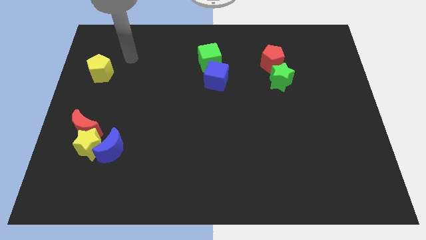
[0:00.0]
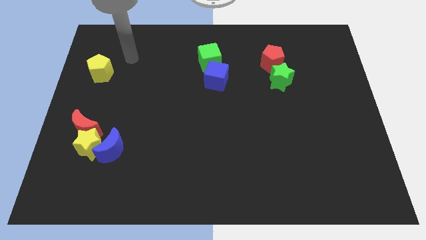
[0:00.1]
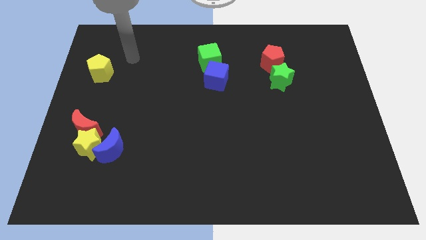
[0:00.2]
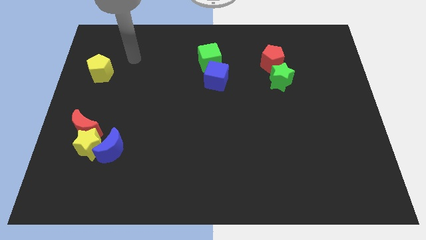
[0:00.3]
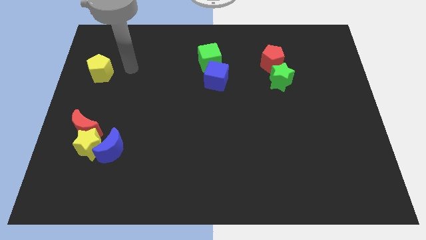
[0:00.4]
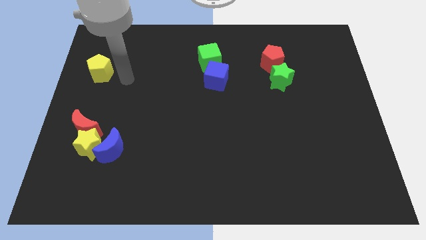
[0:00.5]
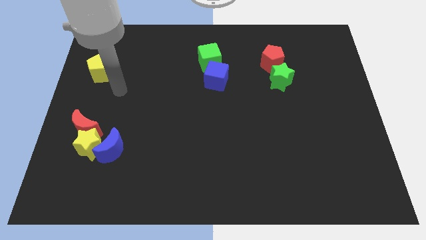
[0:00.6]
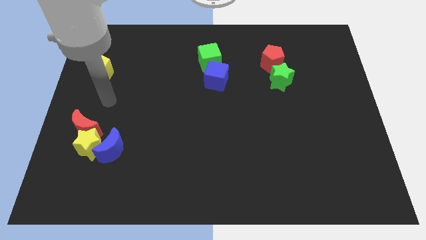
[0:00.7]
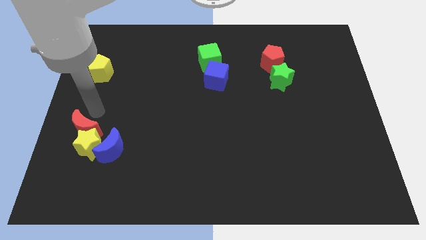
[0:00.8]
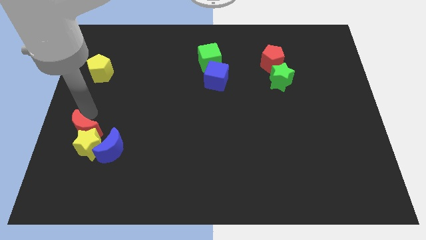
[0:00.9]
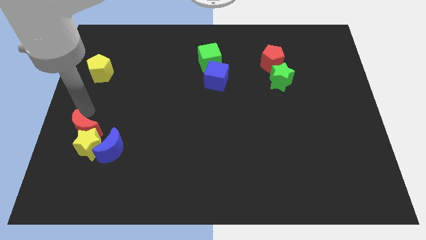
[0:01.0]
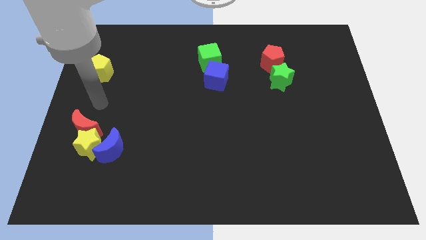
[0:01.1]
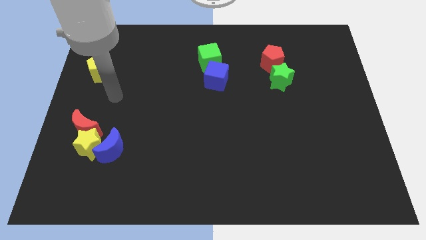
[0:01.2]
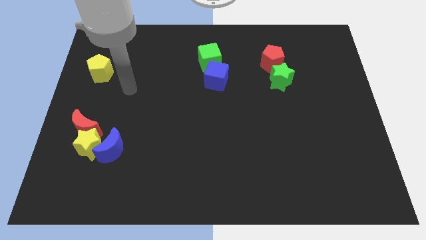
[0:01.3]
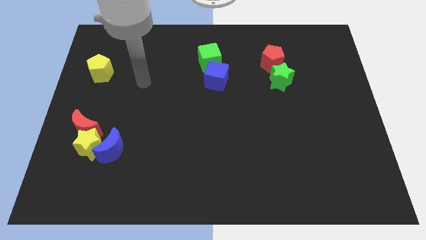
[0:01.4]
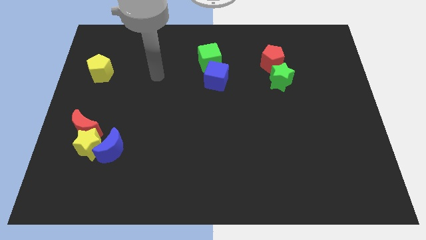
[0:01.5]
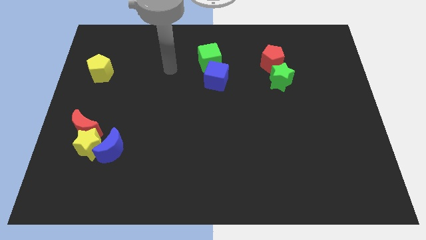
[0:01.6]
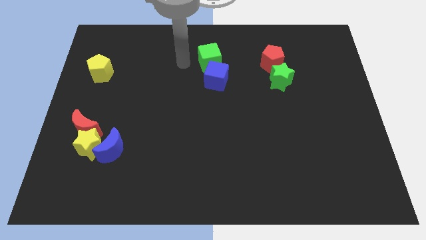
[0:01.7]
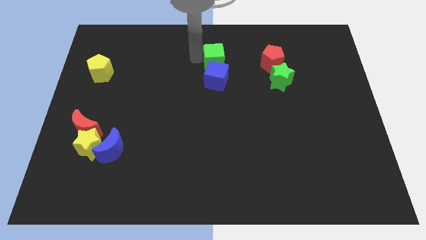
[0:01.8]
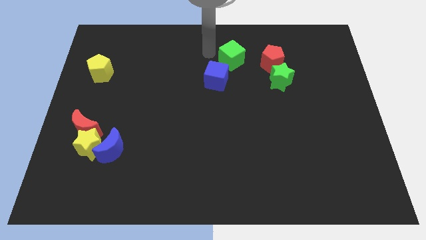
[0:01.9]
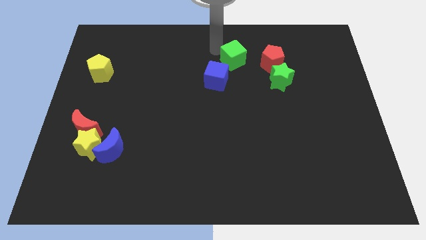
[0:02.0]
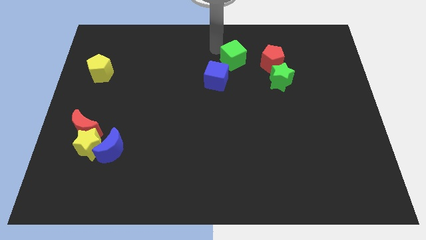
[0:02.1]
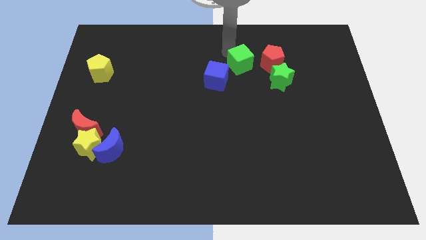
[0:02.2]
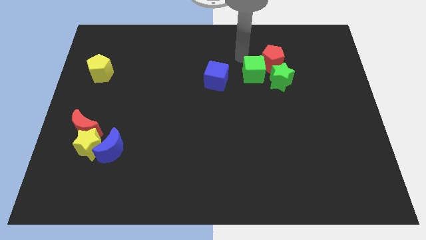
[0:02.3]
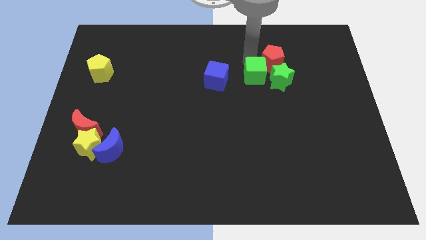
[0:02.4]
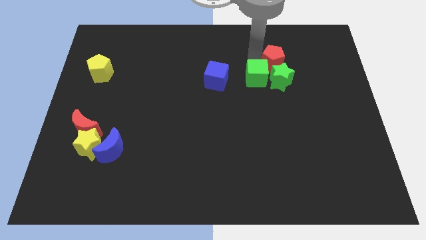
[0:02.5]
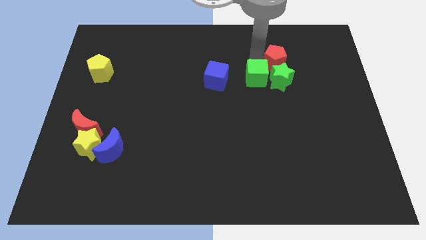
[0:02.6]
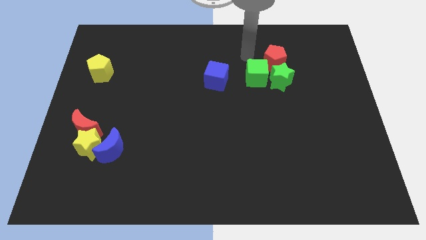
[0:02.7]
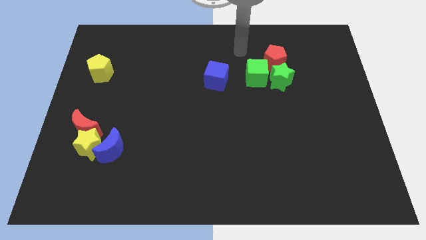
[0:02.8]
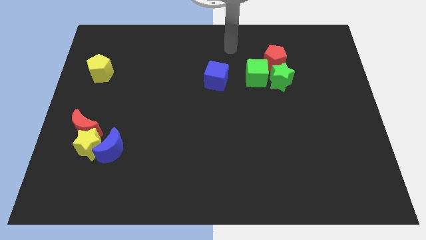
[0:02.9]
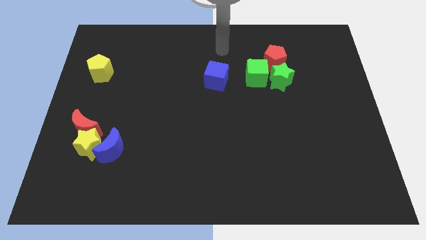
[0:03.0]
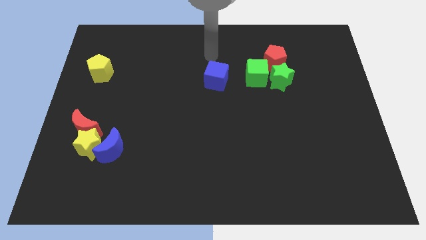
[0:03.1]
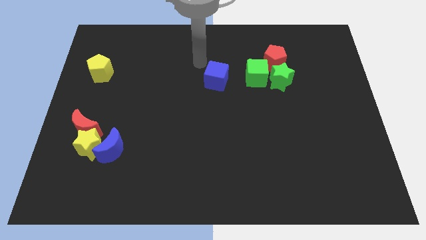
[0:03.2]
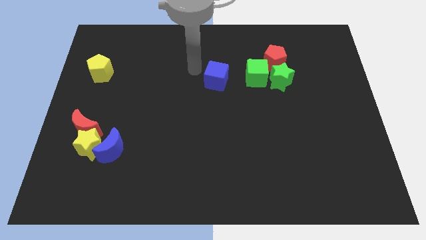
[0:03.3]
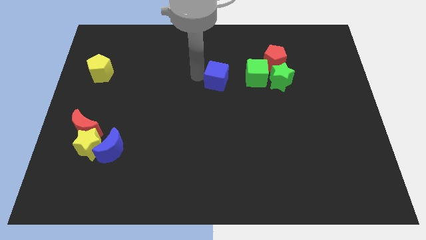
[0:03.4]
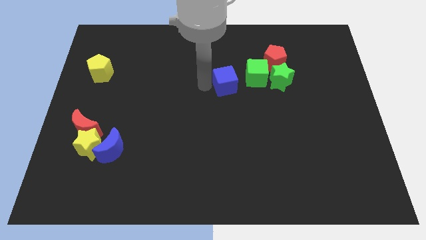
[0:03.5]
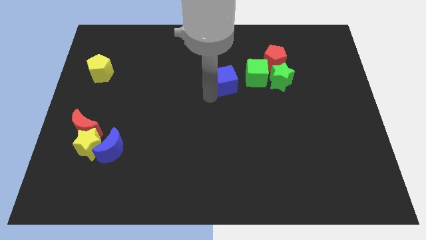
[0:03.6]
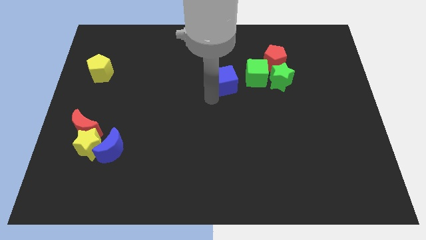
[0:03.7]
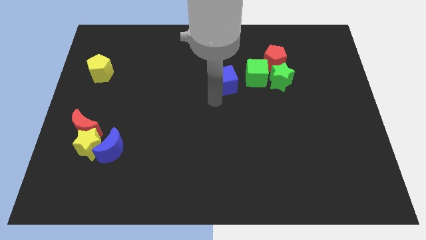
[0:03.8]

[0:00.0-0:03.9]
move the green cube towards the left side of the green star

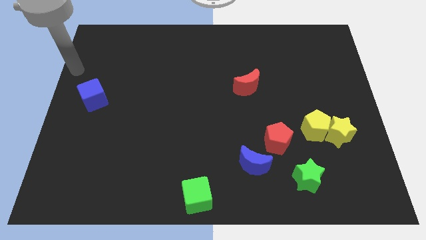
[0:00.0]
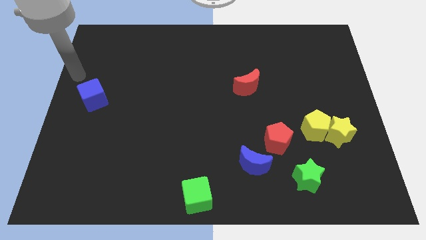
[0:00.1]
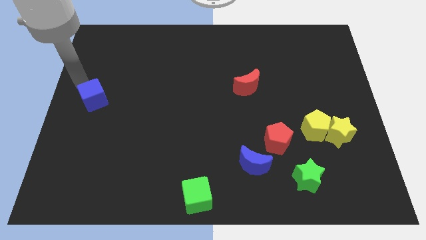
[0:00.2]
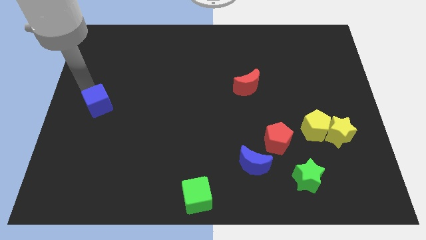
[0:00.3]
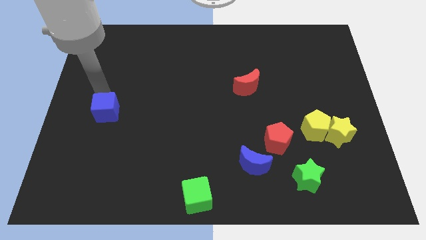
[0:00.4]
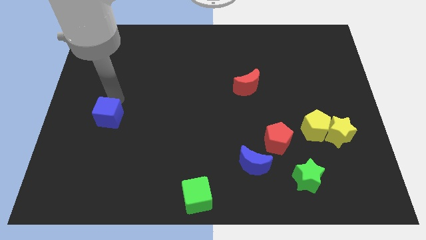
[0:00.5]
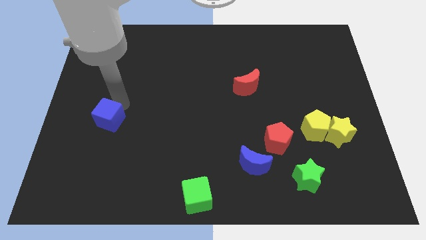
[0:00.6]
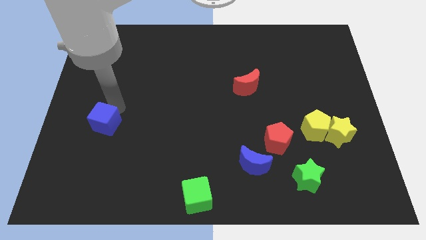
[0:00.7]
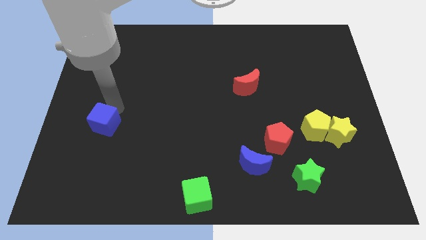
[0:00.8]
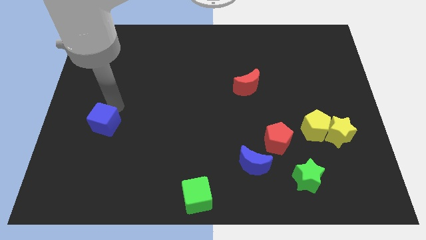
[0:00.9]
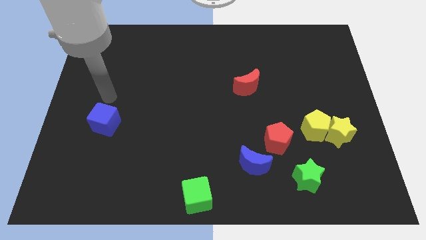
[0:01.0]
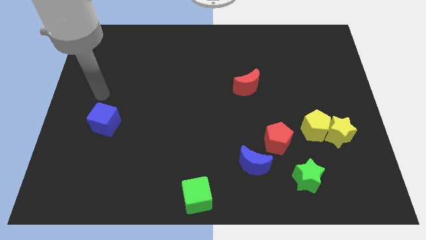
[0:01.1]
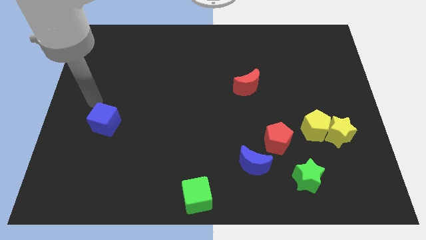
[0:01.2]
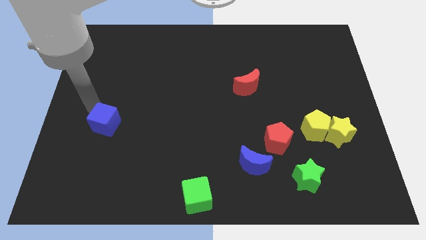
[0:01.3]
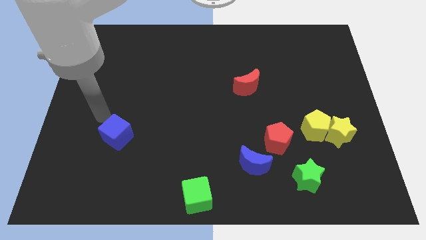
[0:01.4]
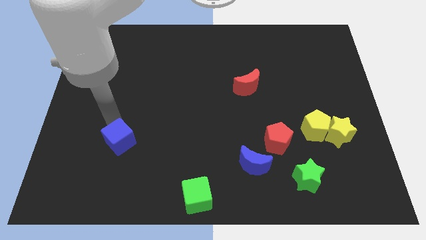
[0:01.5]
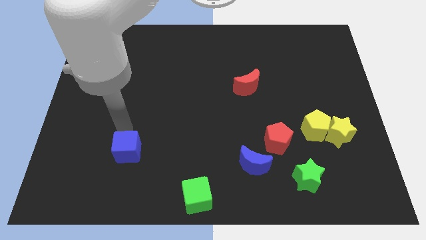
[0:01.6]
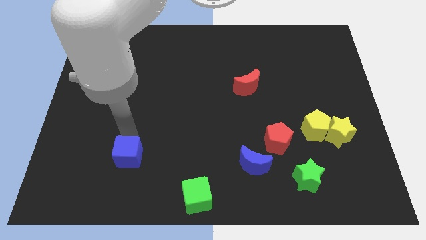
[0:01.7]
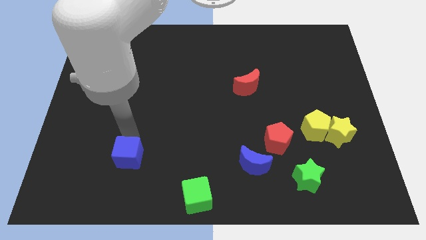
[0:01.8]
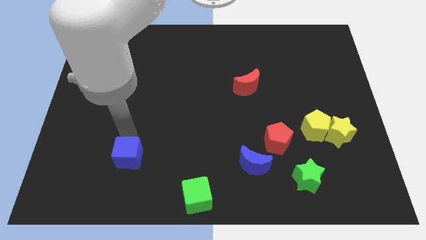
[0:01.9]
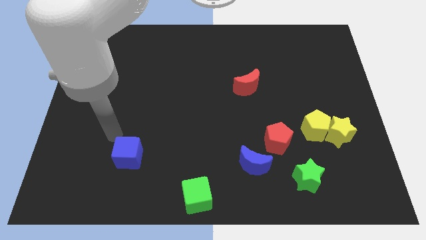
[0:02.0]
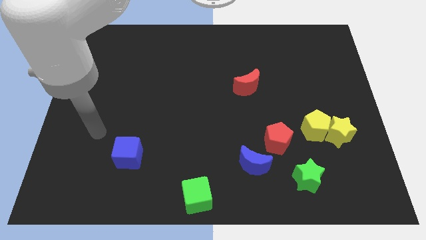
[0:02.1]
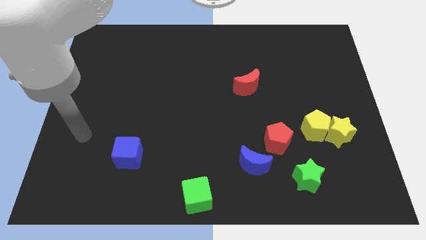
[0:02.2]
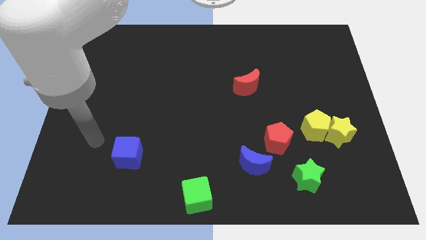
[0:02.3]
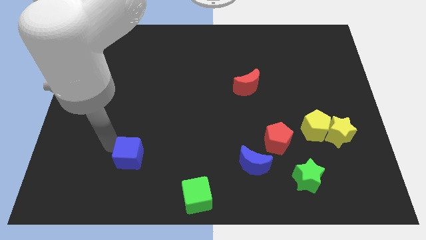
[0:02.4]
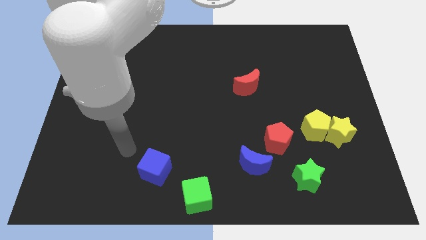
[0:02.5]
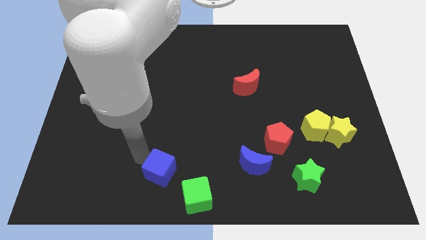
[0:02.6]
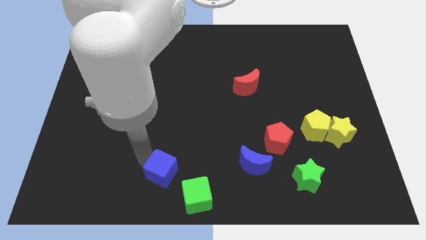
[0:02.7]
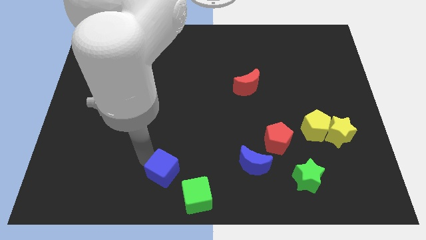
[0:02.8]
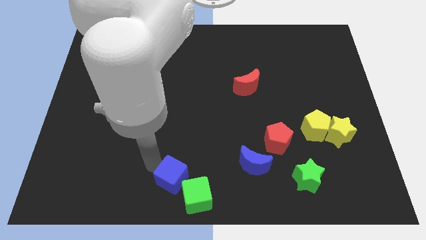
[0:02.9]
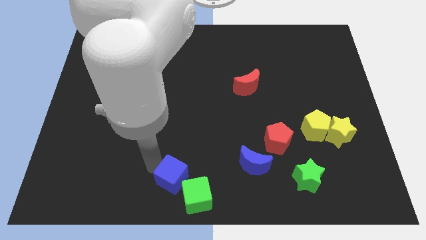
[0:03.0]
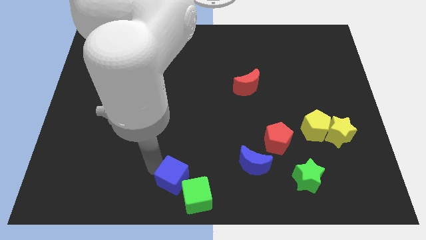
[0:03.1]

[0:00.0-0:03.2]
push blue cube towards the green cube

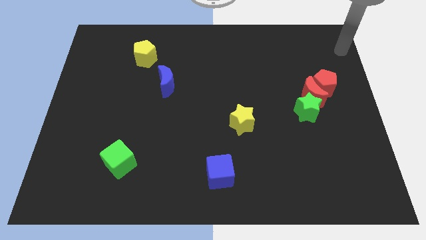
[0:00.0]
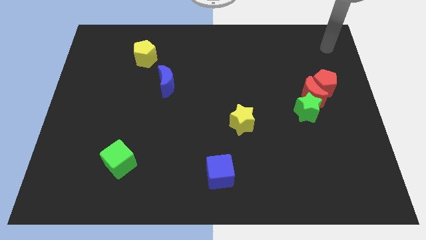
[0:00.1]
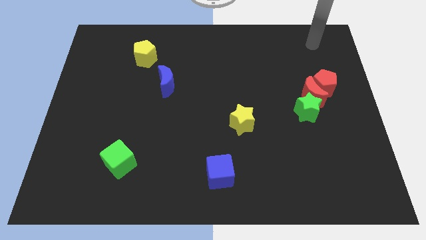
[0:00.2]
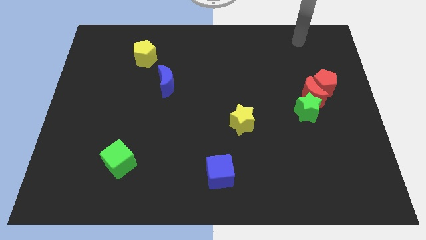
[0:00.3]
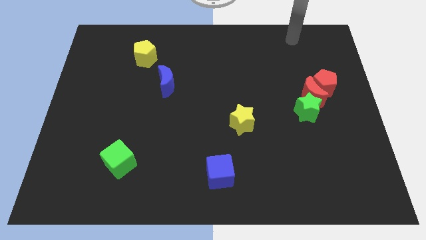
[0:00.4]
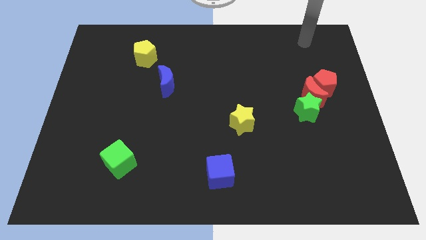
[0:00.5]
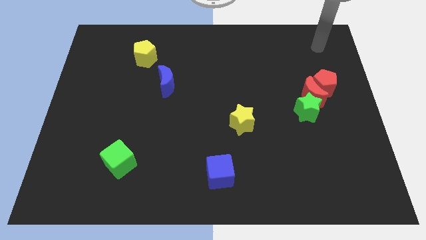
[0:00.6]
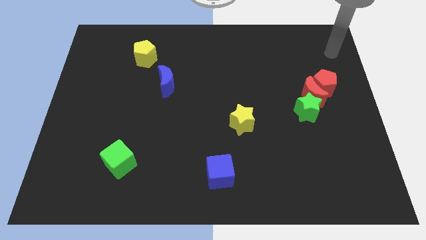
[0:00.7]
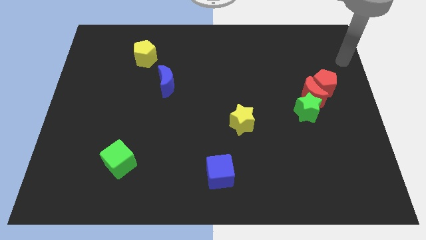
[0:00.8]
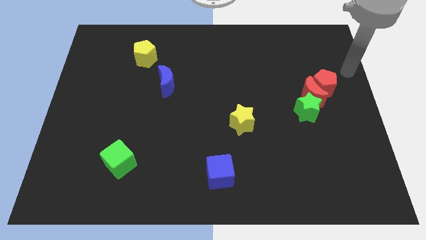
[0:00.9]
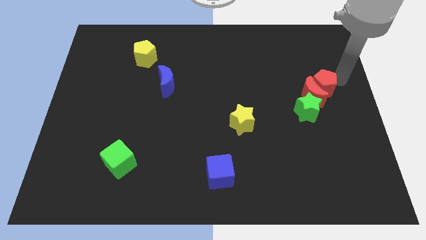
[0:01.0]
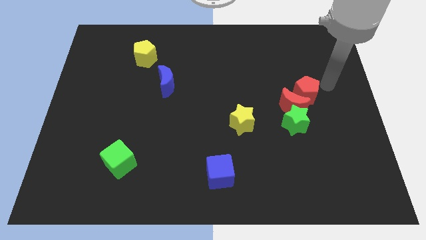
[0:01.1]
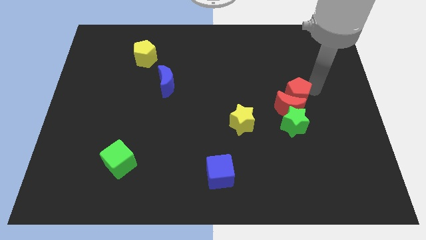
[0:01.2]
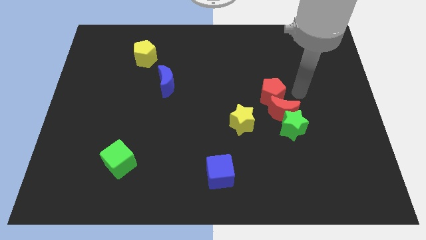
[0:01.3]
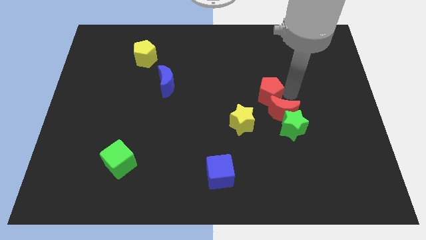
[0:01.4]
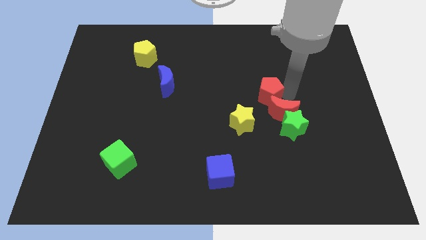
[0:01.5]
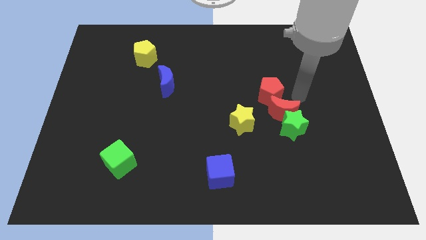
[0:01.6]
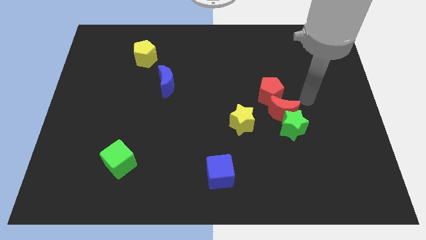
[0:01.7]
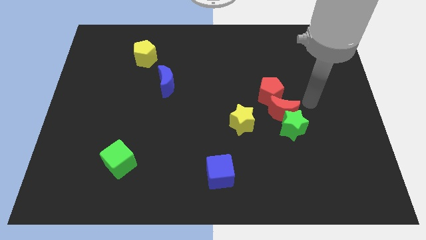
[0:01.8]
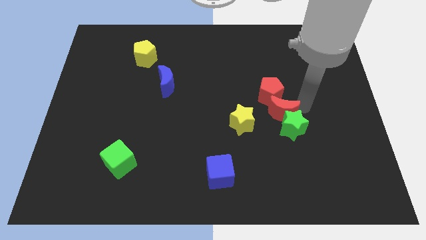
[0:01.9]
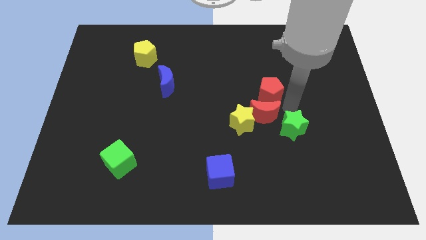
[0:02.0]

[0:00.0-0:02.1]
separate the green star from the red moon and red pentagon
